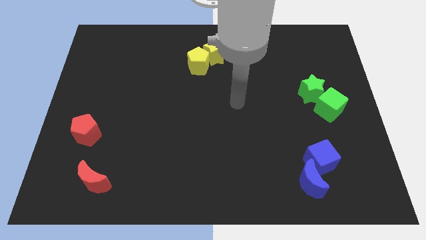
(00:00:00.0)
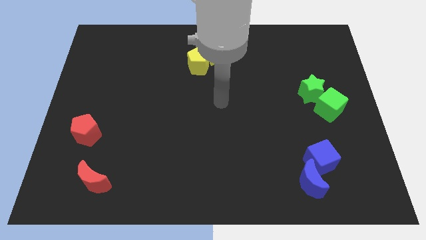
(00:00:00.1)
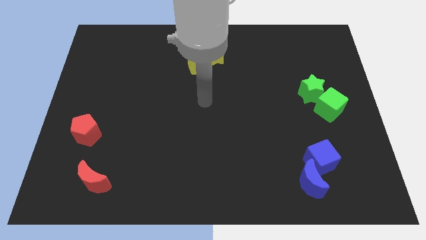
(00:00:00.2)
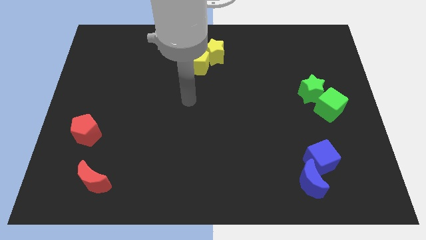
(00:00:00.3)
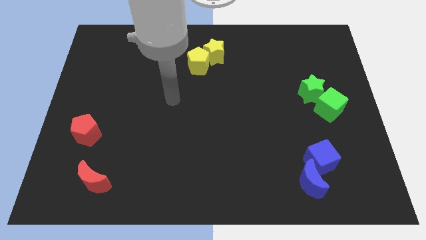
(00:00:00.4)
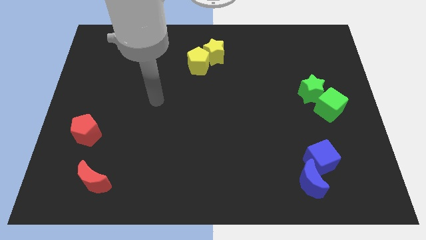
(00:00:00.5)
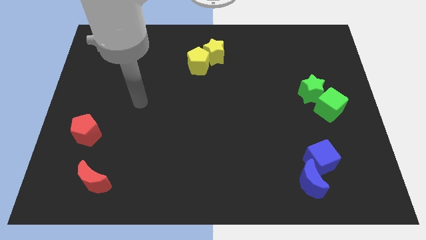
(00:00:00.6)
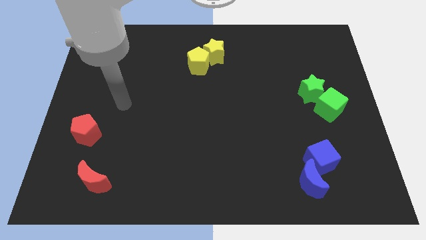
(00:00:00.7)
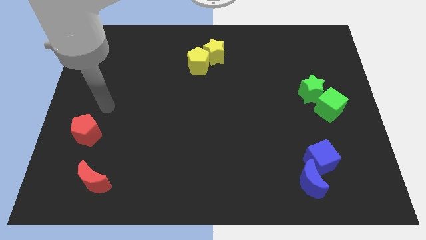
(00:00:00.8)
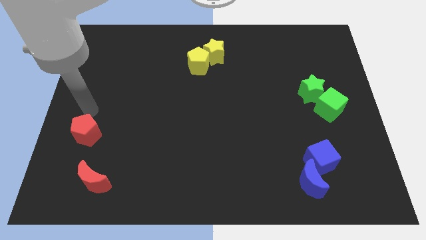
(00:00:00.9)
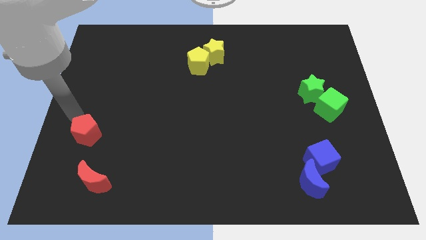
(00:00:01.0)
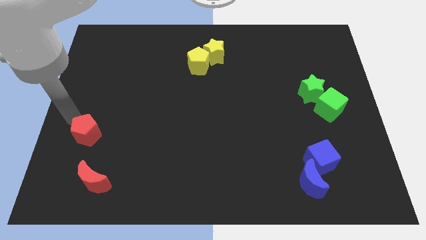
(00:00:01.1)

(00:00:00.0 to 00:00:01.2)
place your hand at the top of the red pentagon

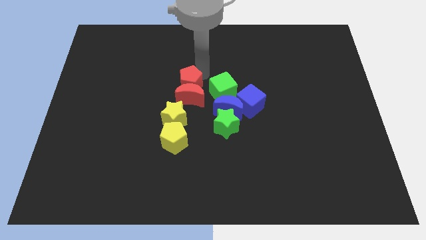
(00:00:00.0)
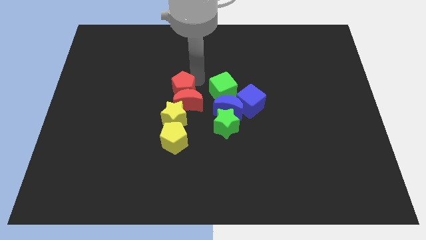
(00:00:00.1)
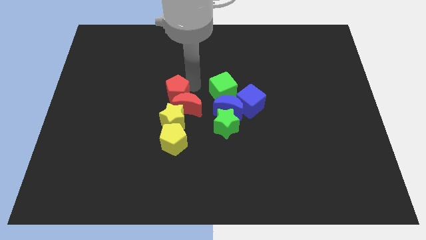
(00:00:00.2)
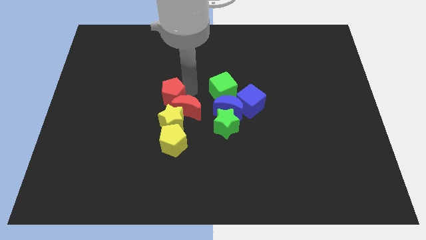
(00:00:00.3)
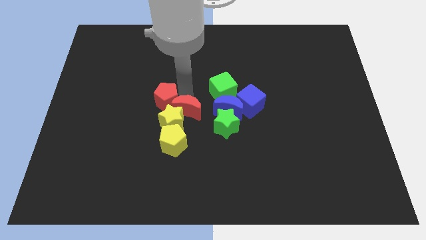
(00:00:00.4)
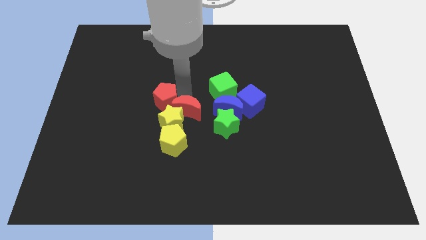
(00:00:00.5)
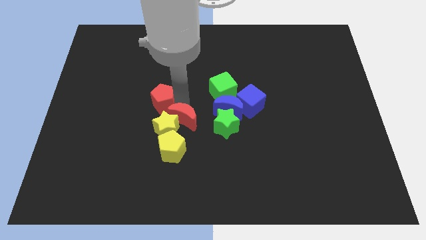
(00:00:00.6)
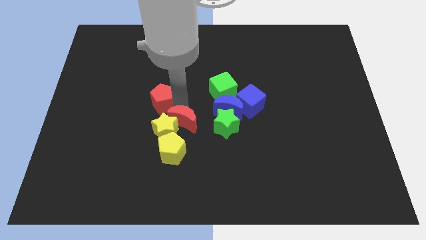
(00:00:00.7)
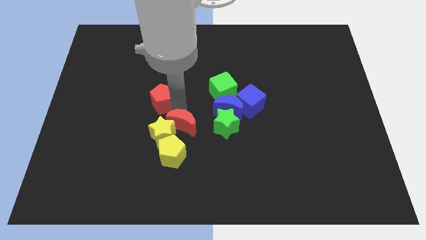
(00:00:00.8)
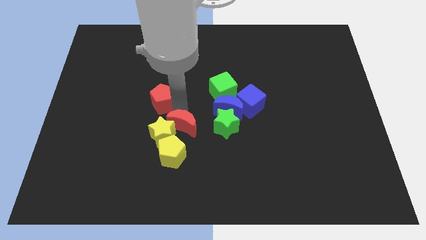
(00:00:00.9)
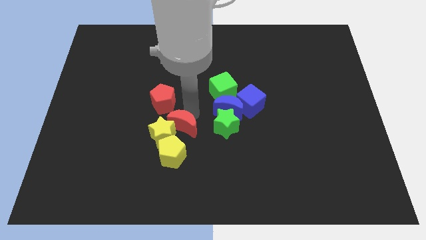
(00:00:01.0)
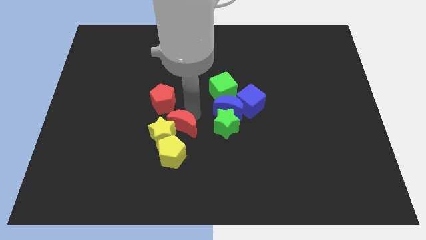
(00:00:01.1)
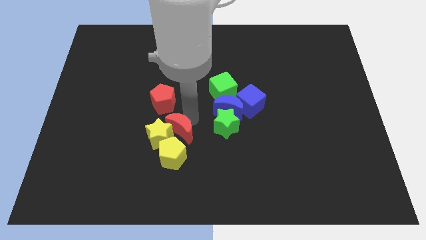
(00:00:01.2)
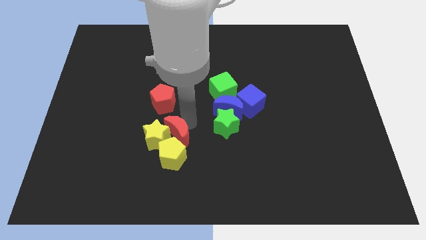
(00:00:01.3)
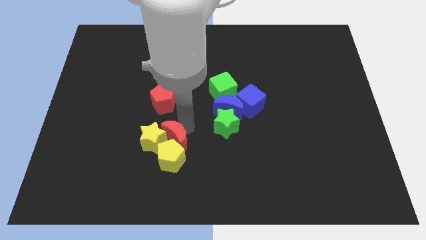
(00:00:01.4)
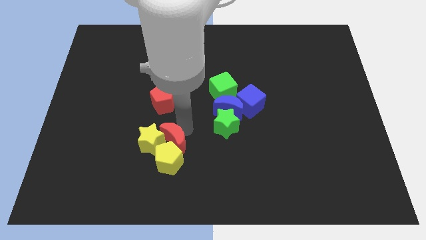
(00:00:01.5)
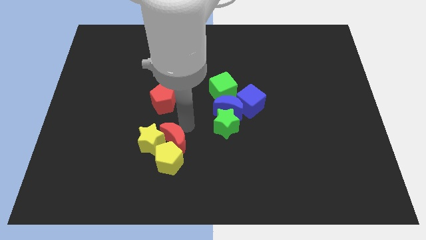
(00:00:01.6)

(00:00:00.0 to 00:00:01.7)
push the red moon slightly towards the yellow blocks

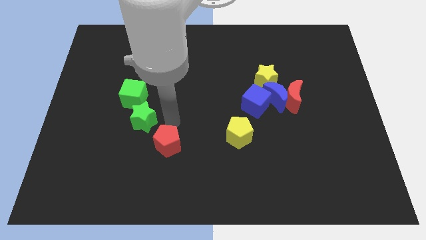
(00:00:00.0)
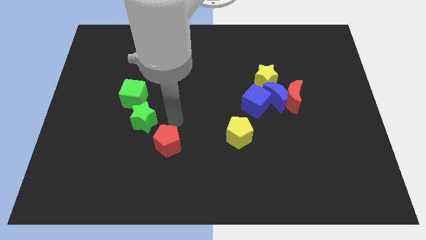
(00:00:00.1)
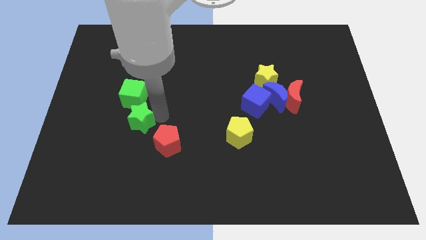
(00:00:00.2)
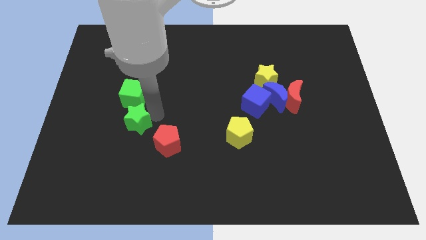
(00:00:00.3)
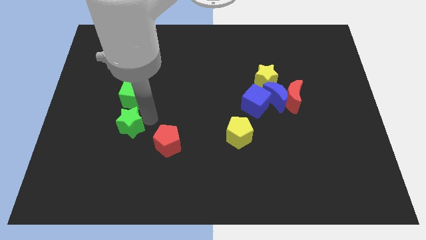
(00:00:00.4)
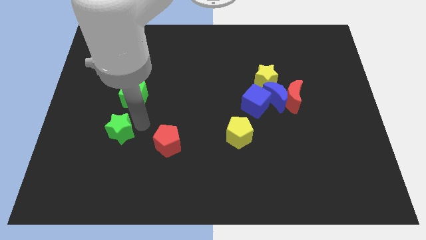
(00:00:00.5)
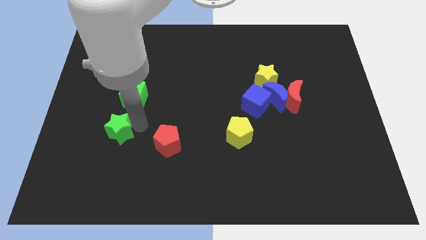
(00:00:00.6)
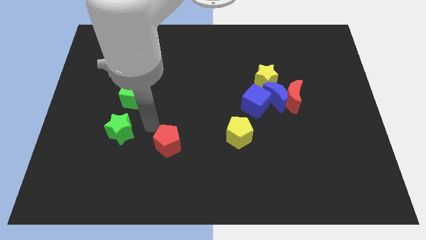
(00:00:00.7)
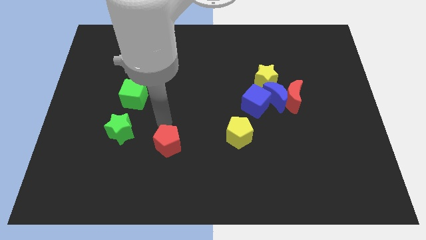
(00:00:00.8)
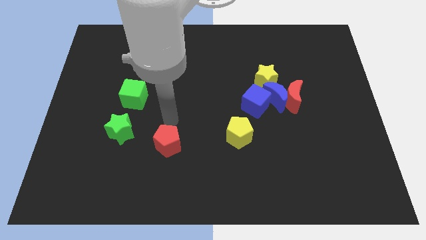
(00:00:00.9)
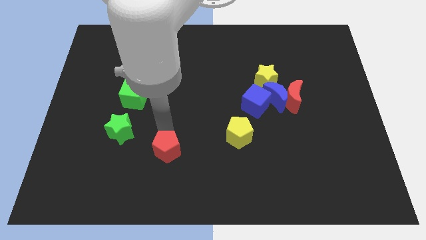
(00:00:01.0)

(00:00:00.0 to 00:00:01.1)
move the green star below the green cube

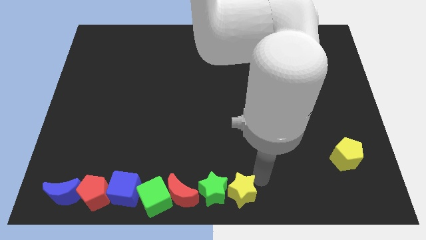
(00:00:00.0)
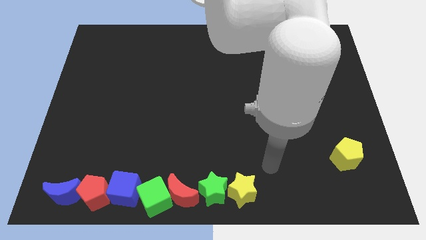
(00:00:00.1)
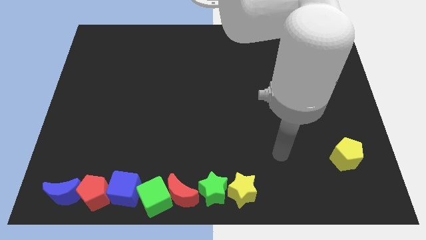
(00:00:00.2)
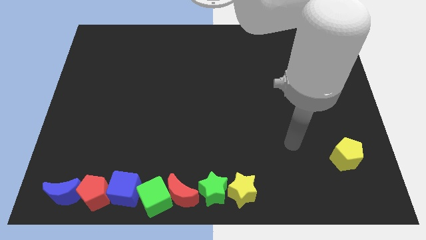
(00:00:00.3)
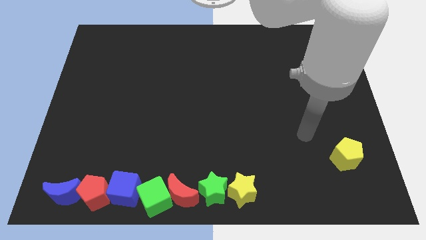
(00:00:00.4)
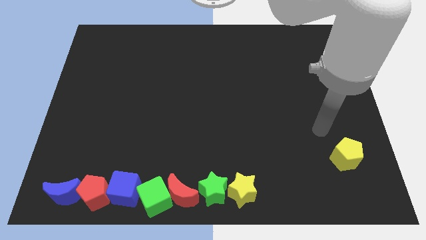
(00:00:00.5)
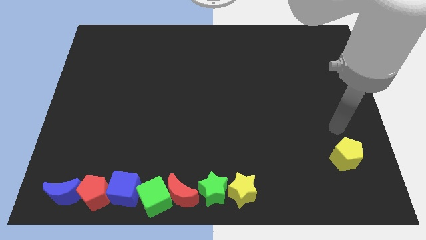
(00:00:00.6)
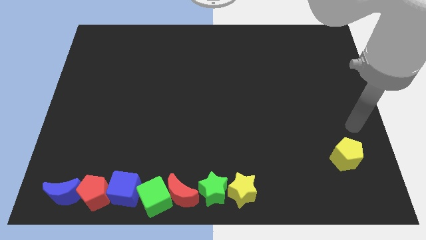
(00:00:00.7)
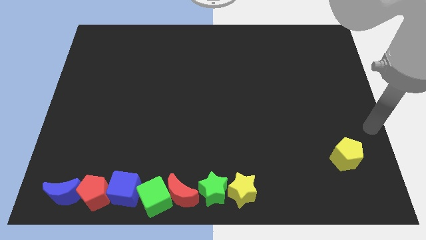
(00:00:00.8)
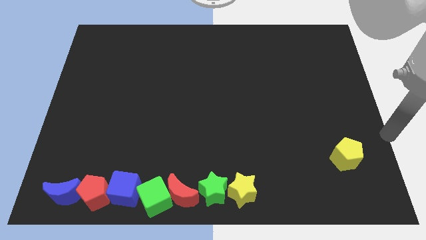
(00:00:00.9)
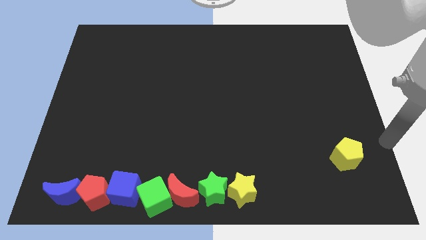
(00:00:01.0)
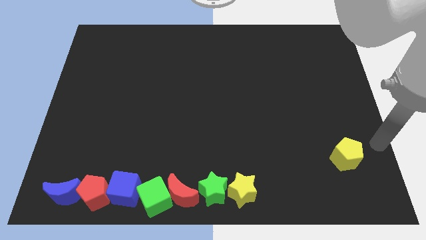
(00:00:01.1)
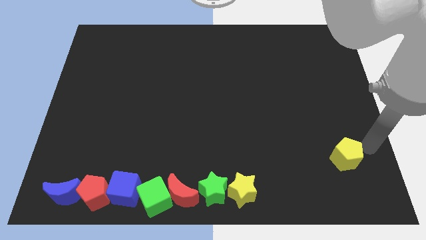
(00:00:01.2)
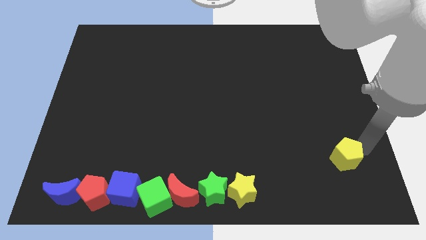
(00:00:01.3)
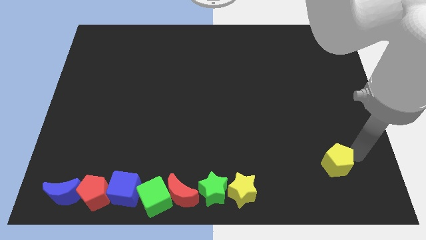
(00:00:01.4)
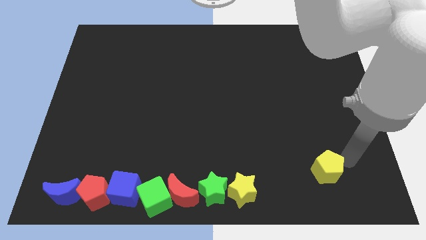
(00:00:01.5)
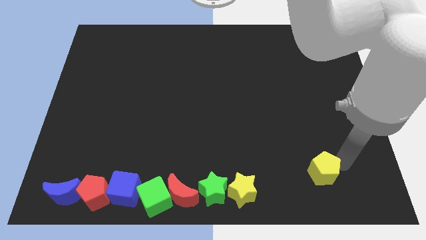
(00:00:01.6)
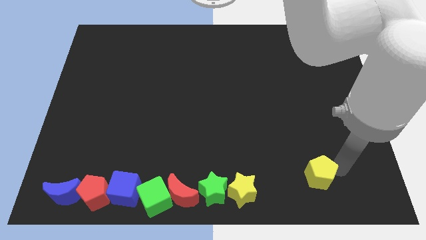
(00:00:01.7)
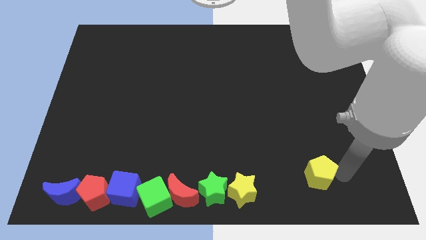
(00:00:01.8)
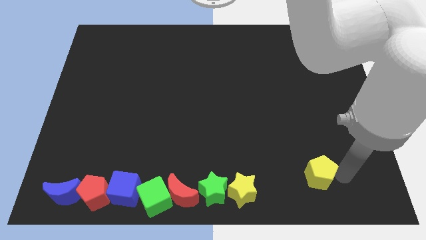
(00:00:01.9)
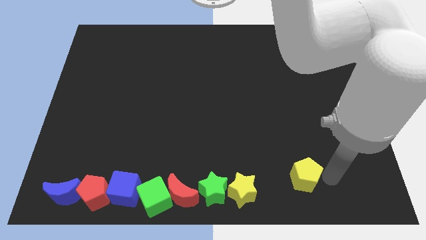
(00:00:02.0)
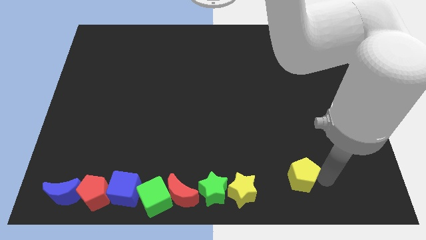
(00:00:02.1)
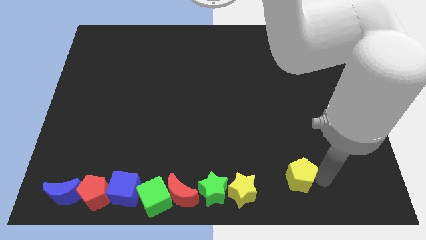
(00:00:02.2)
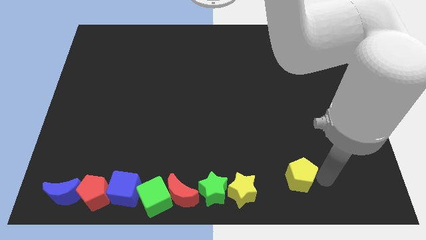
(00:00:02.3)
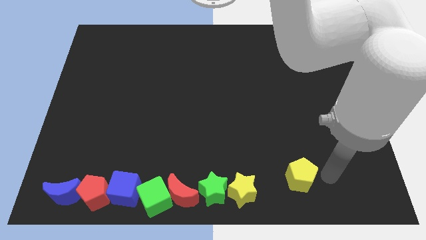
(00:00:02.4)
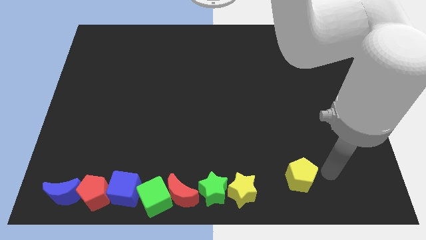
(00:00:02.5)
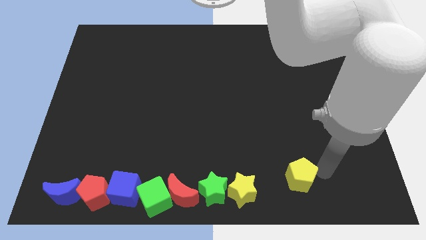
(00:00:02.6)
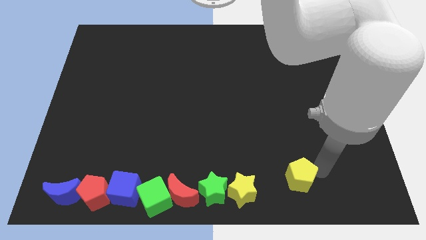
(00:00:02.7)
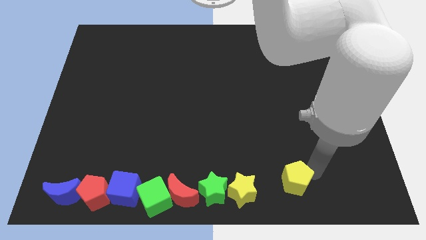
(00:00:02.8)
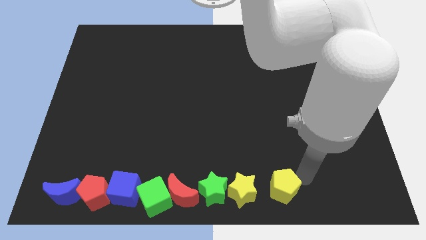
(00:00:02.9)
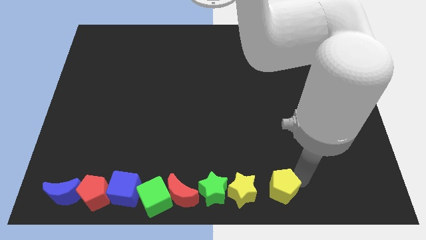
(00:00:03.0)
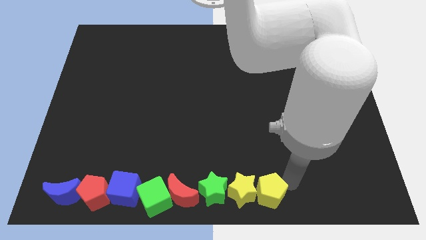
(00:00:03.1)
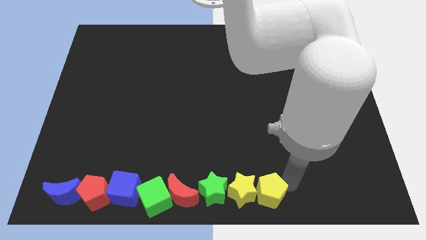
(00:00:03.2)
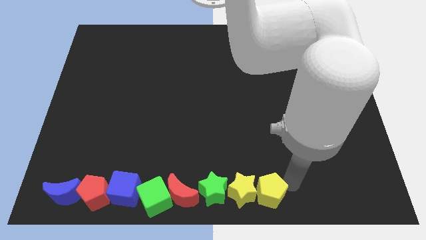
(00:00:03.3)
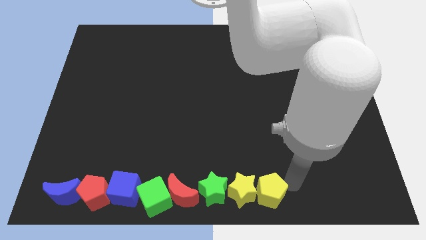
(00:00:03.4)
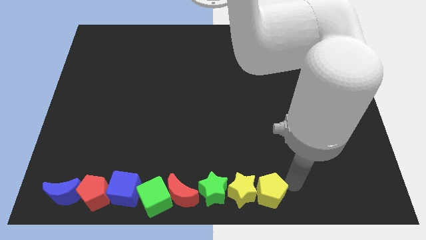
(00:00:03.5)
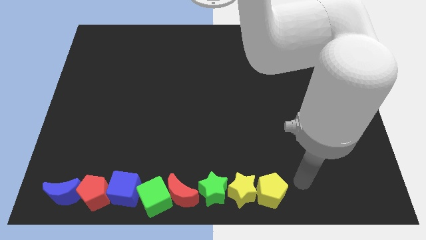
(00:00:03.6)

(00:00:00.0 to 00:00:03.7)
move the yellow pentagon into the yellow star to the right in a horizontal line

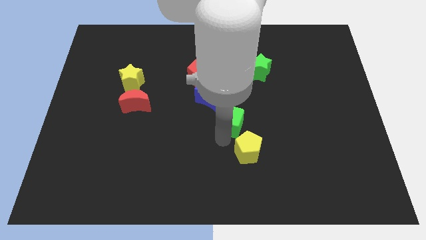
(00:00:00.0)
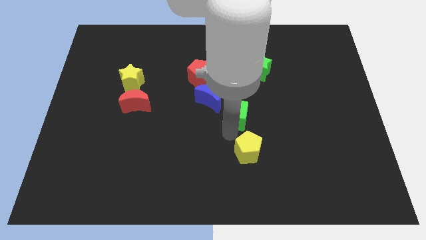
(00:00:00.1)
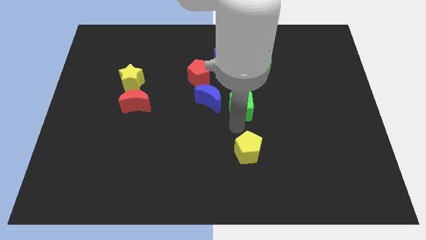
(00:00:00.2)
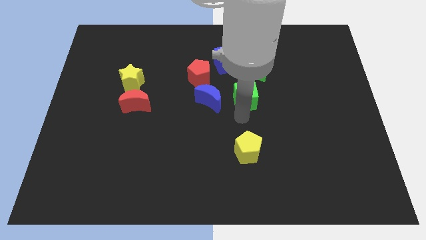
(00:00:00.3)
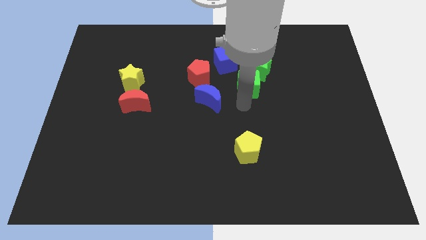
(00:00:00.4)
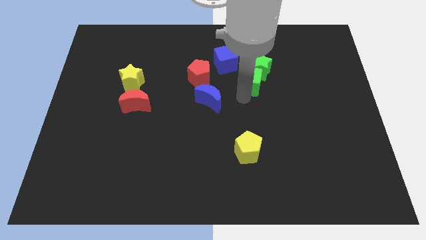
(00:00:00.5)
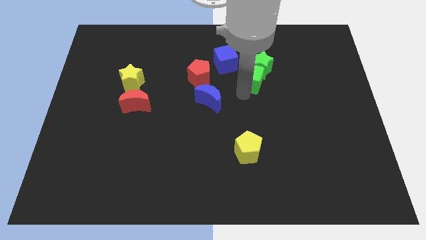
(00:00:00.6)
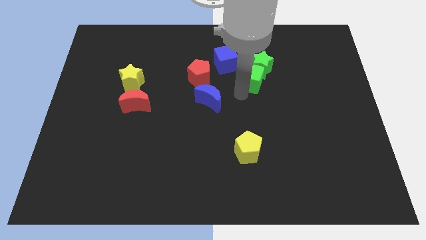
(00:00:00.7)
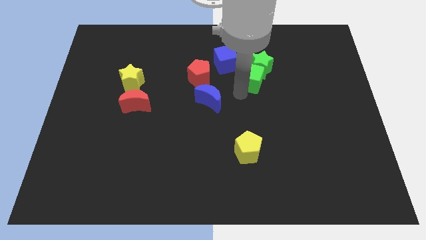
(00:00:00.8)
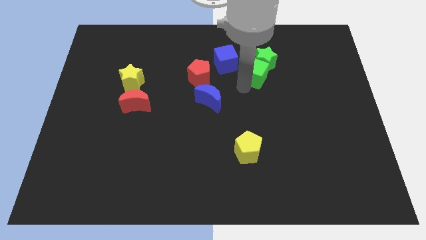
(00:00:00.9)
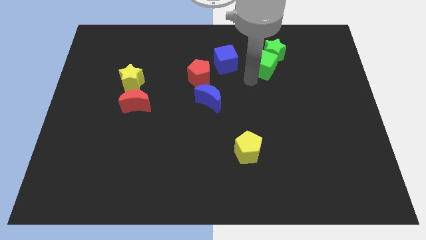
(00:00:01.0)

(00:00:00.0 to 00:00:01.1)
push the green cube in to green star
